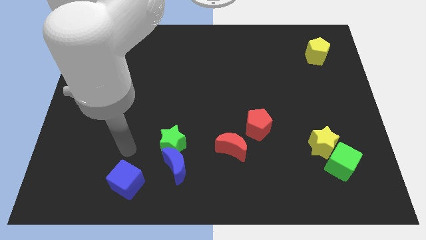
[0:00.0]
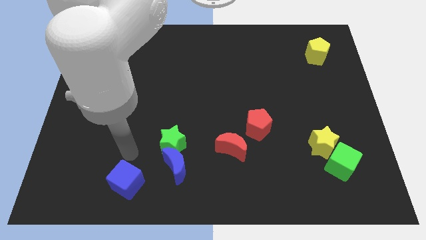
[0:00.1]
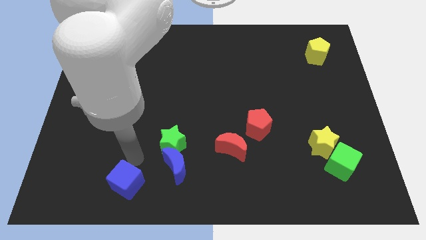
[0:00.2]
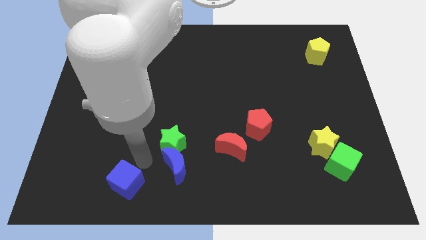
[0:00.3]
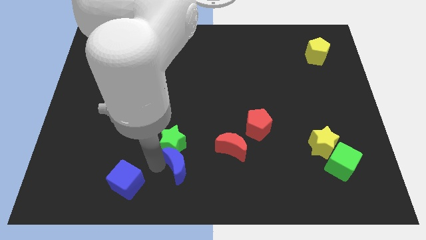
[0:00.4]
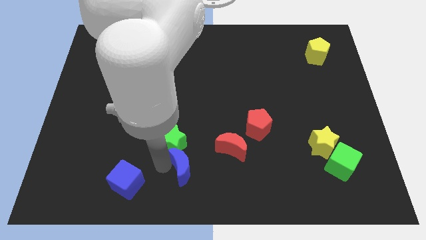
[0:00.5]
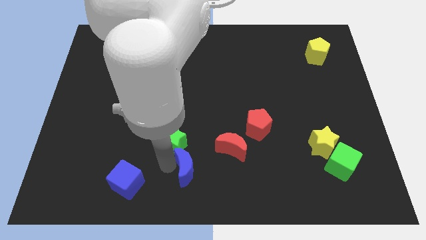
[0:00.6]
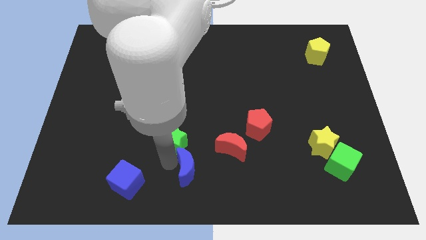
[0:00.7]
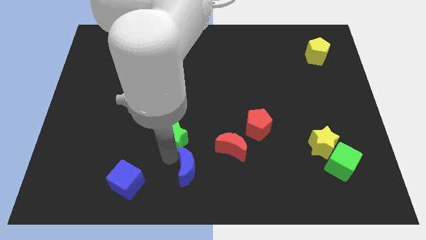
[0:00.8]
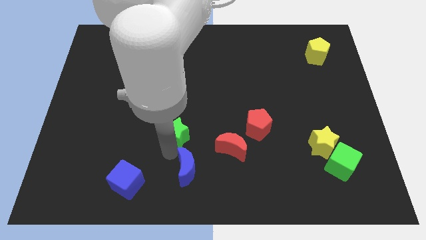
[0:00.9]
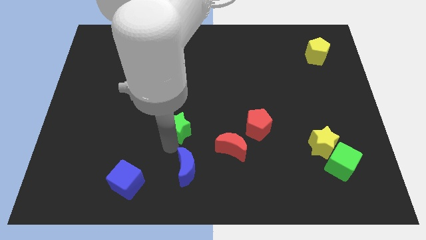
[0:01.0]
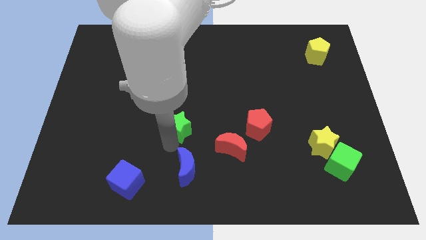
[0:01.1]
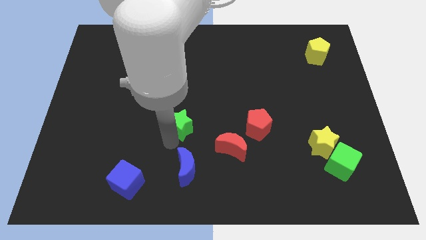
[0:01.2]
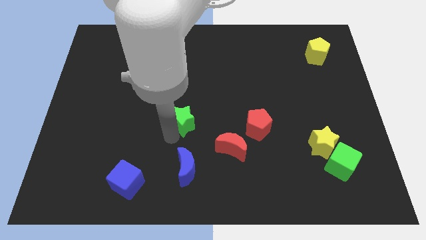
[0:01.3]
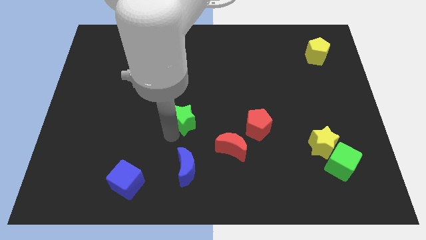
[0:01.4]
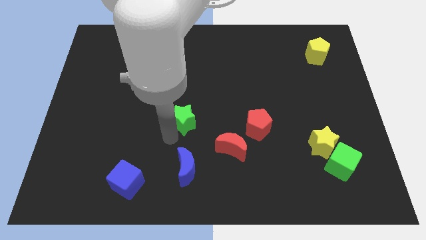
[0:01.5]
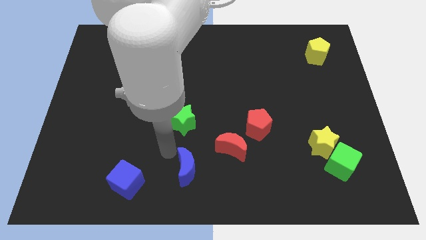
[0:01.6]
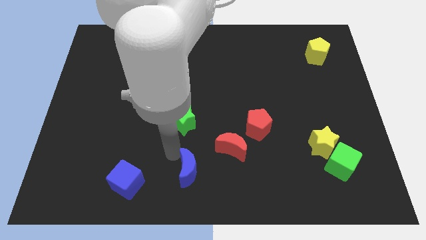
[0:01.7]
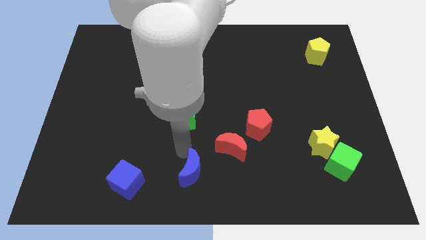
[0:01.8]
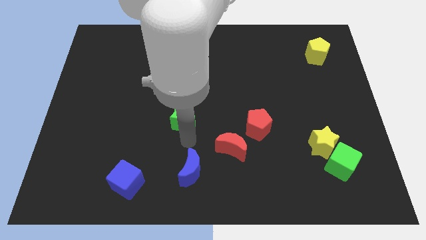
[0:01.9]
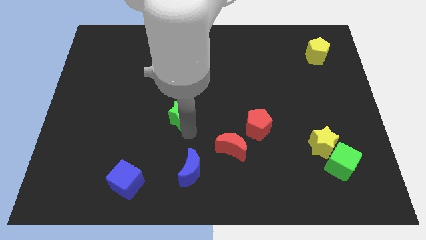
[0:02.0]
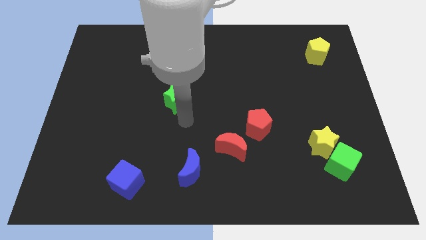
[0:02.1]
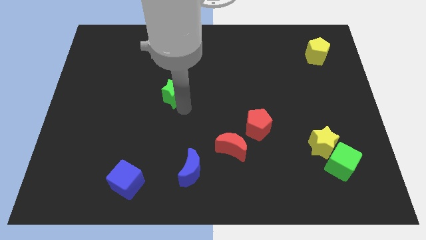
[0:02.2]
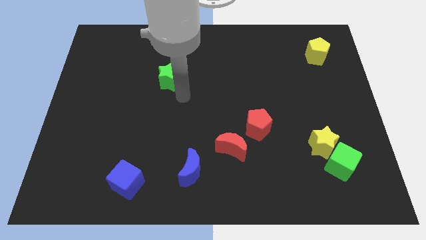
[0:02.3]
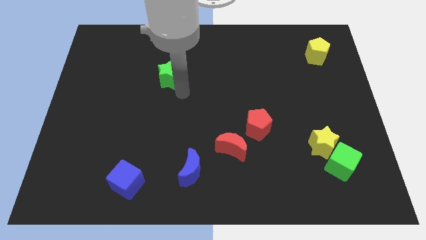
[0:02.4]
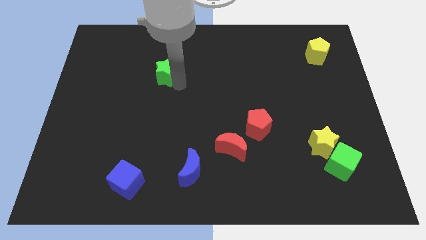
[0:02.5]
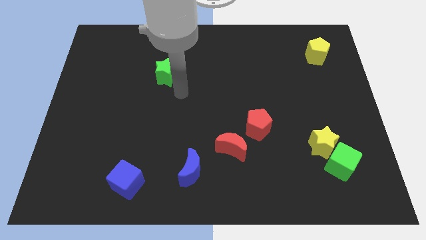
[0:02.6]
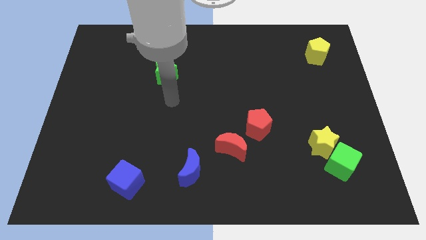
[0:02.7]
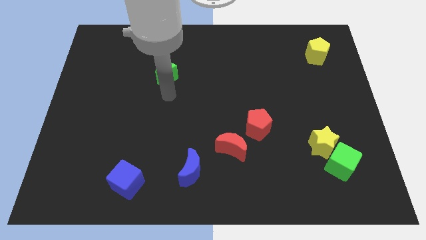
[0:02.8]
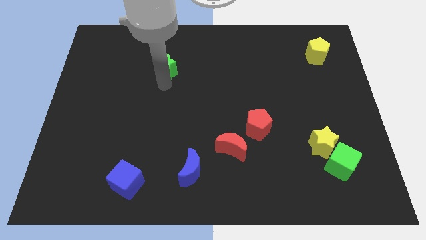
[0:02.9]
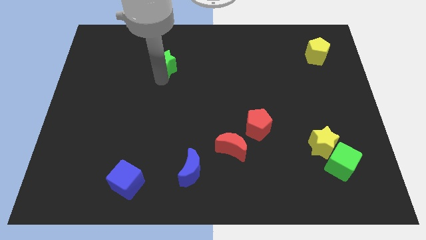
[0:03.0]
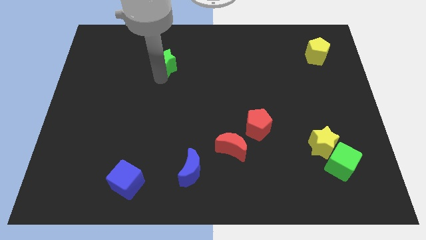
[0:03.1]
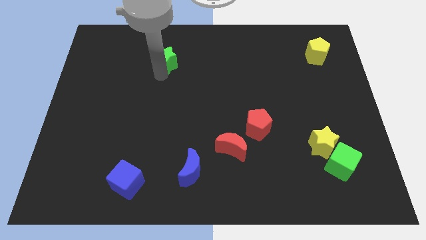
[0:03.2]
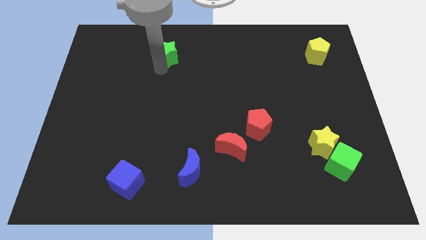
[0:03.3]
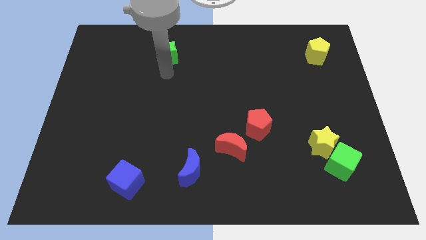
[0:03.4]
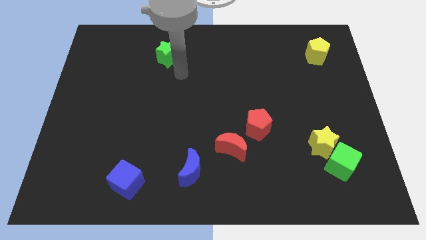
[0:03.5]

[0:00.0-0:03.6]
push the green star towards the top of the board

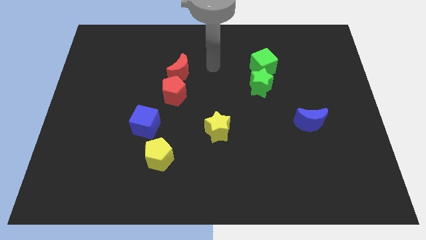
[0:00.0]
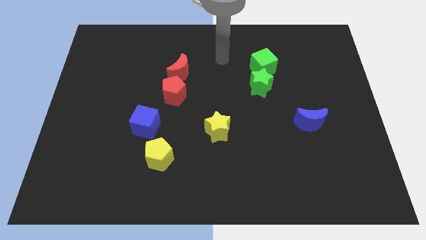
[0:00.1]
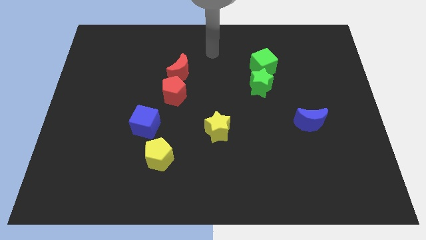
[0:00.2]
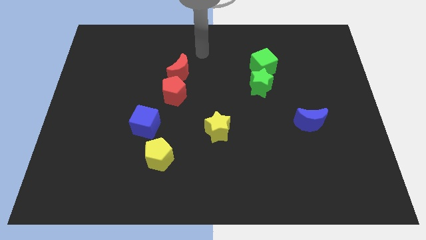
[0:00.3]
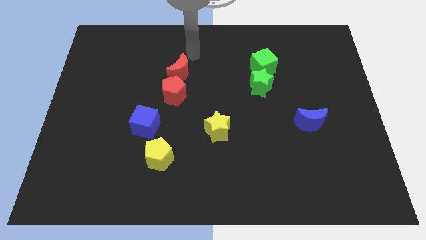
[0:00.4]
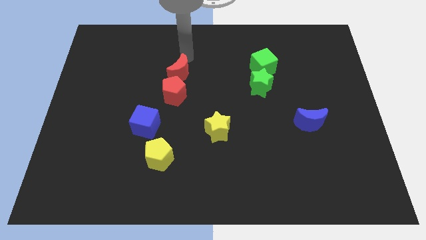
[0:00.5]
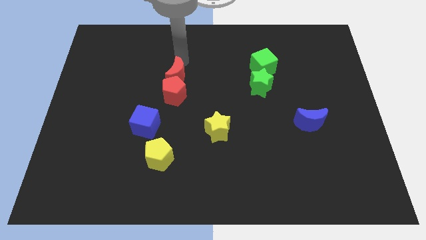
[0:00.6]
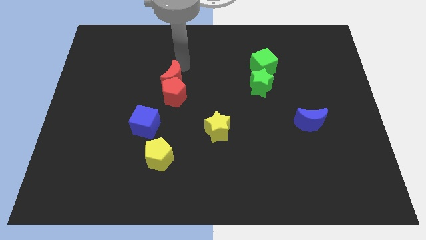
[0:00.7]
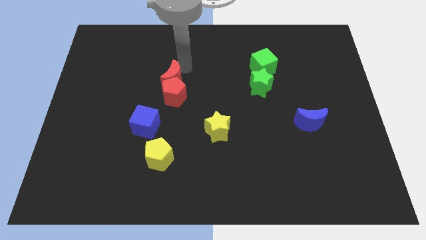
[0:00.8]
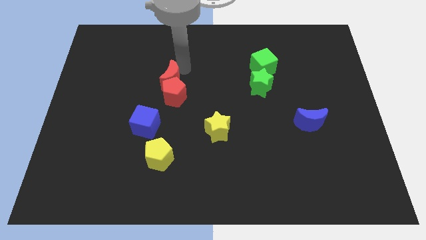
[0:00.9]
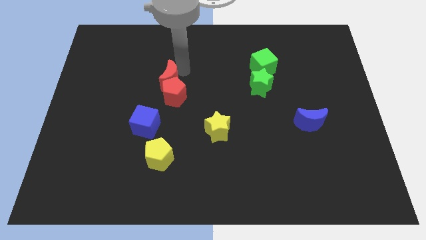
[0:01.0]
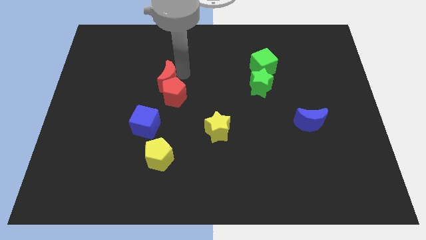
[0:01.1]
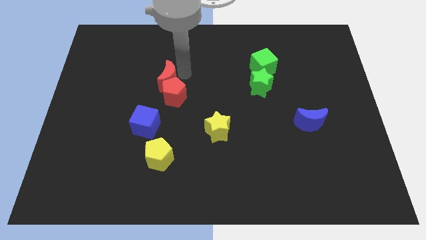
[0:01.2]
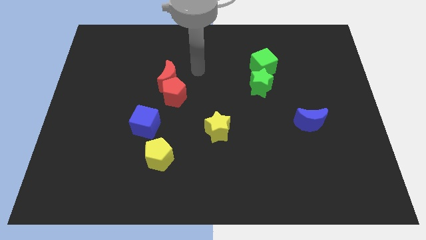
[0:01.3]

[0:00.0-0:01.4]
slightly move the red crescent to the left

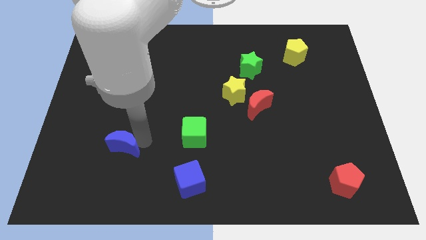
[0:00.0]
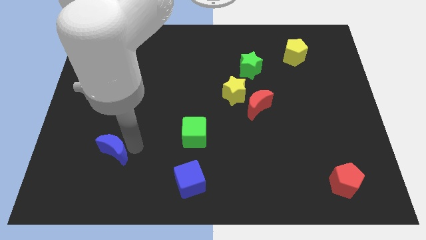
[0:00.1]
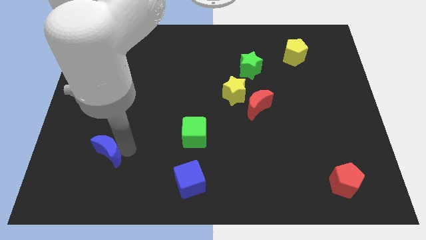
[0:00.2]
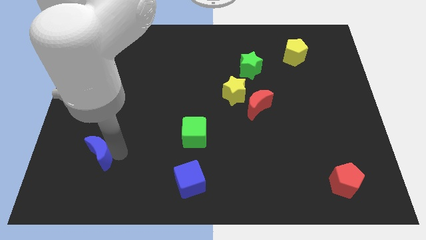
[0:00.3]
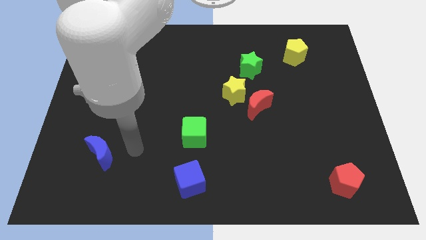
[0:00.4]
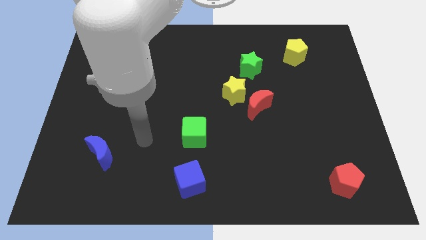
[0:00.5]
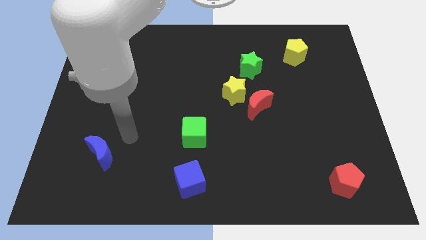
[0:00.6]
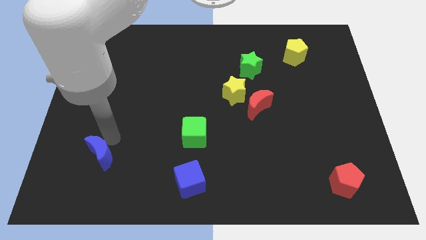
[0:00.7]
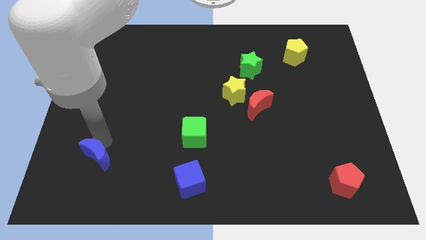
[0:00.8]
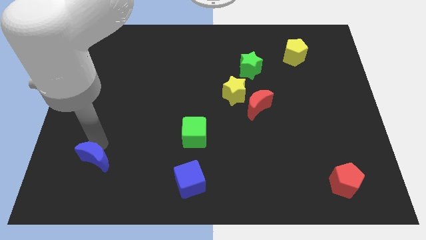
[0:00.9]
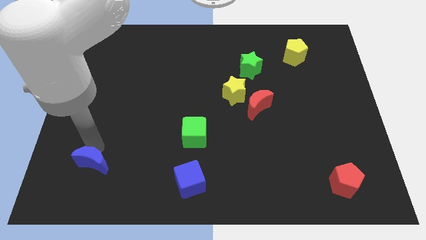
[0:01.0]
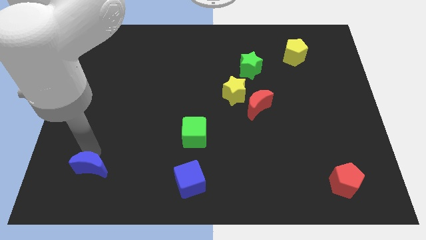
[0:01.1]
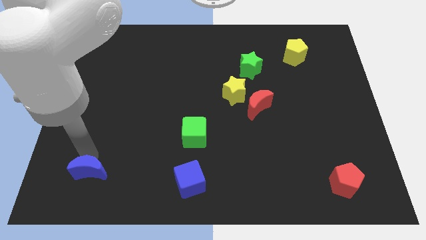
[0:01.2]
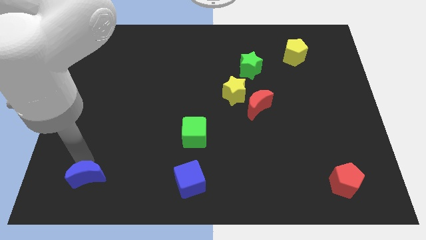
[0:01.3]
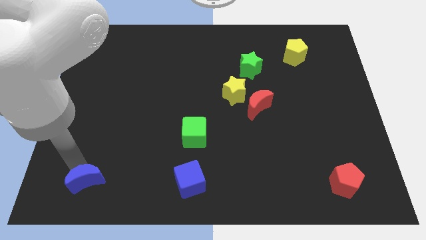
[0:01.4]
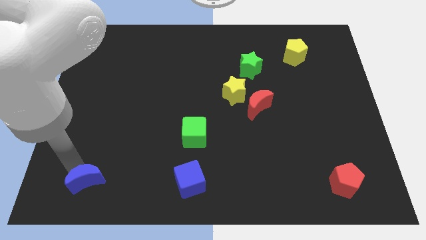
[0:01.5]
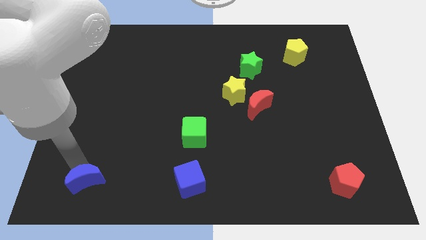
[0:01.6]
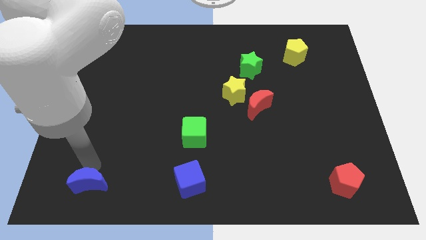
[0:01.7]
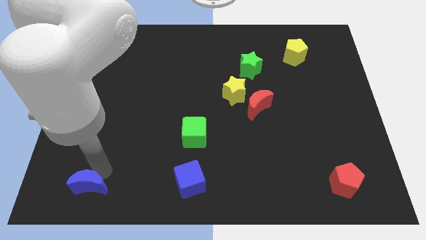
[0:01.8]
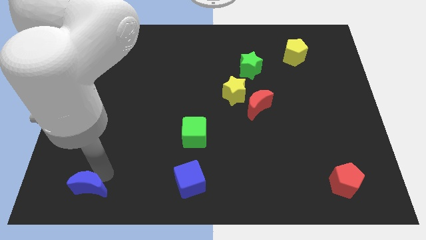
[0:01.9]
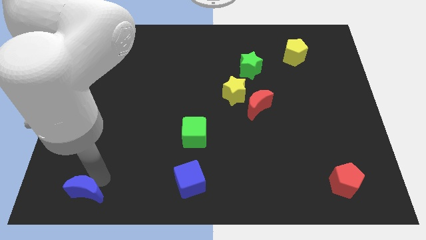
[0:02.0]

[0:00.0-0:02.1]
move blue moon parallel to blue cube

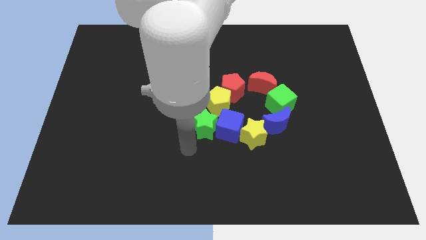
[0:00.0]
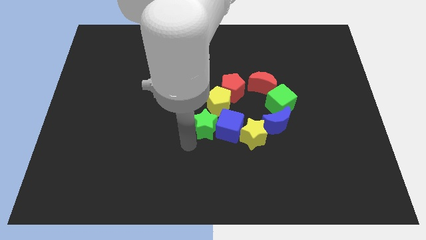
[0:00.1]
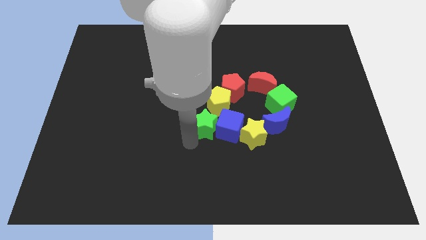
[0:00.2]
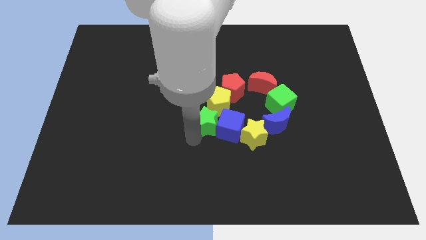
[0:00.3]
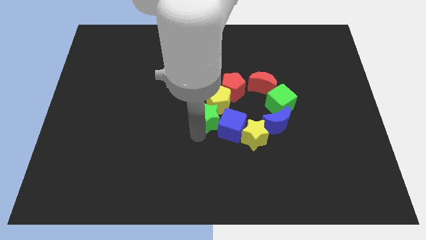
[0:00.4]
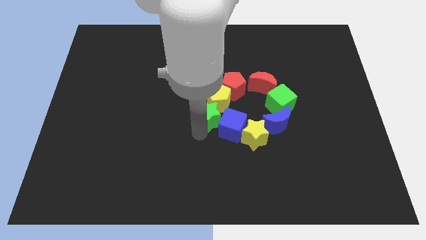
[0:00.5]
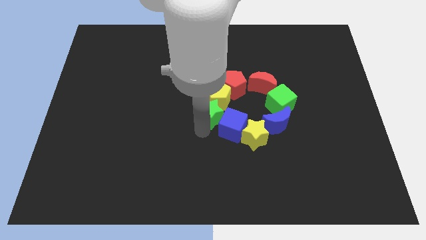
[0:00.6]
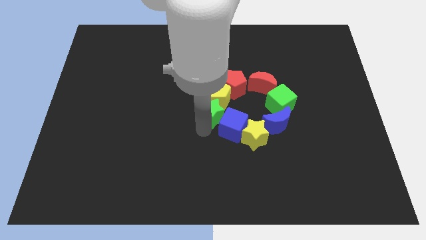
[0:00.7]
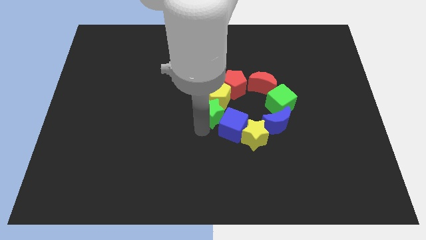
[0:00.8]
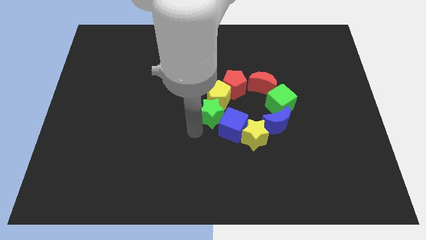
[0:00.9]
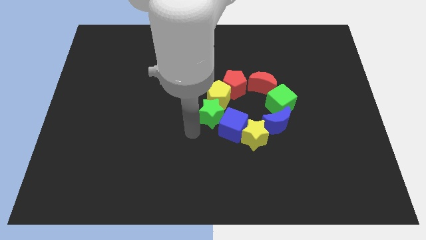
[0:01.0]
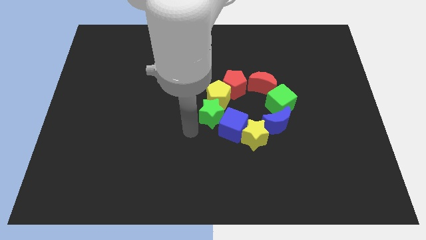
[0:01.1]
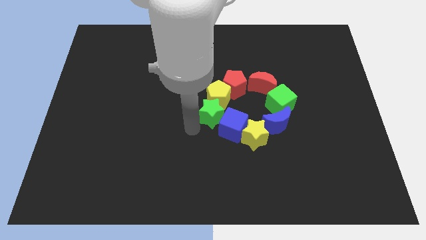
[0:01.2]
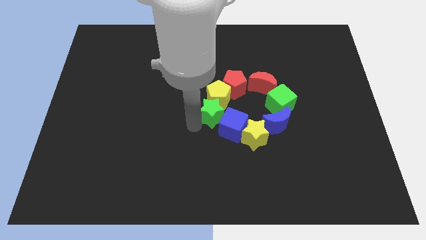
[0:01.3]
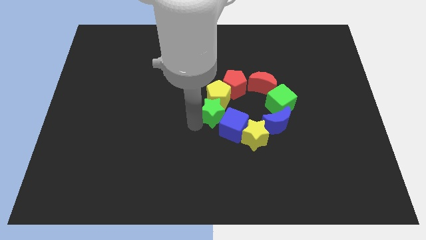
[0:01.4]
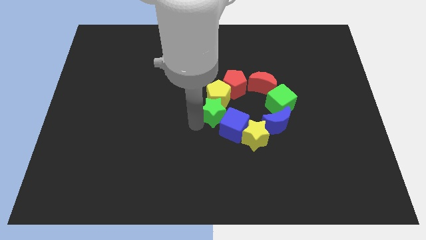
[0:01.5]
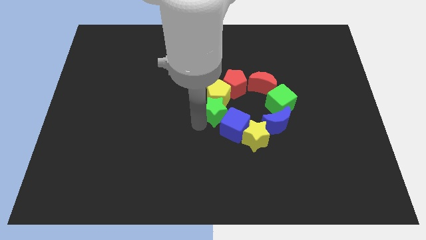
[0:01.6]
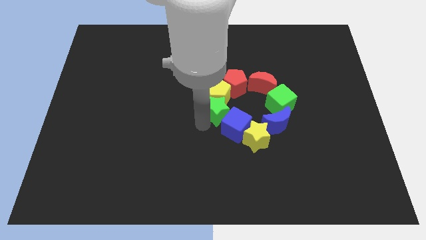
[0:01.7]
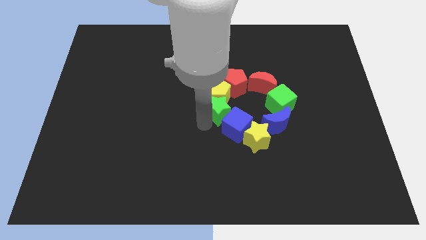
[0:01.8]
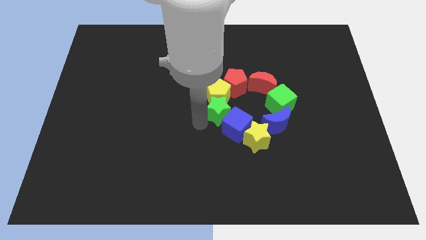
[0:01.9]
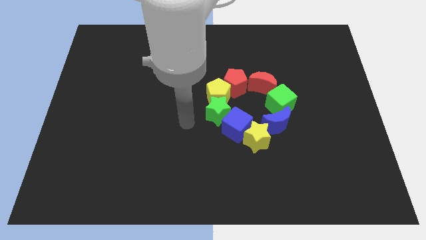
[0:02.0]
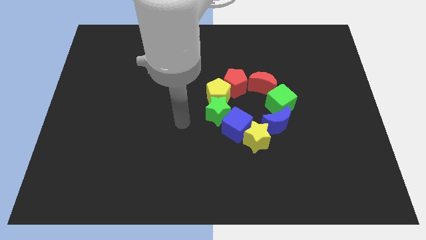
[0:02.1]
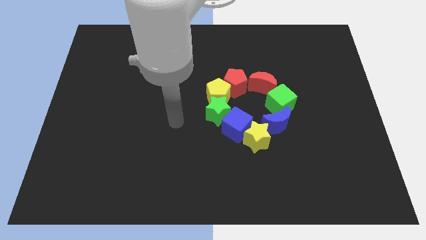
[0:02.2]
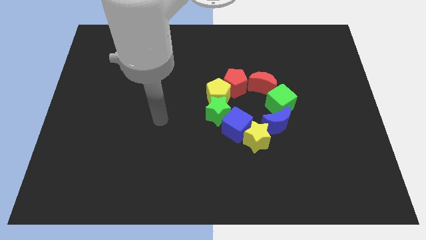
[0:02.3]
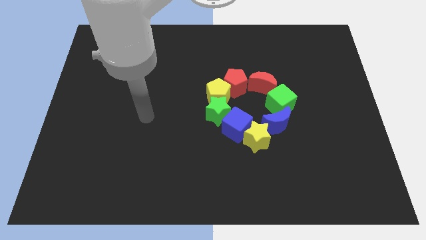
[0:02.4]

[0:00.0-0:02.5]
move your arm to the left
